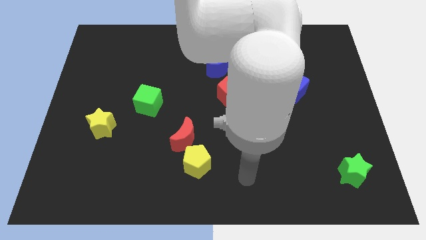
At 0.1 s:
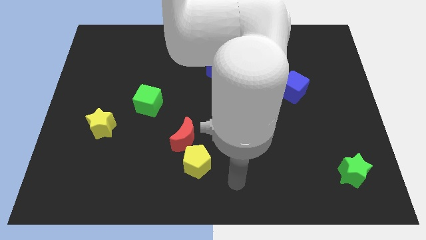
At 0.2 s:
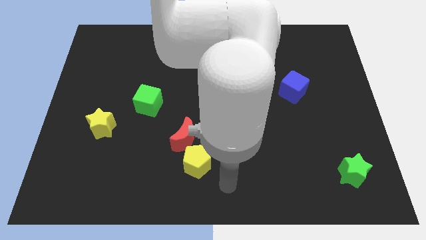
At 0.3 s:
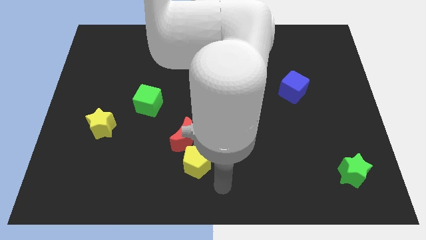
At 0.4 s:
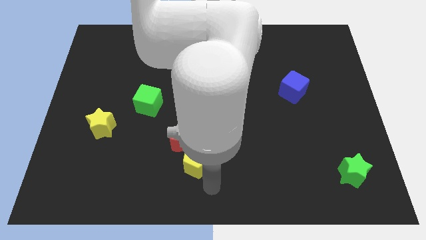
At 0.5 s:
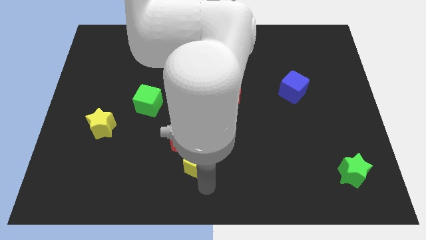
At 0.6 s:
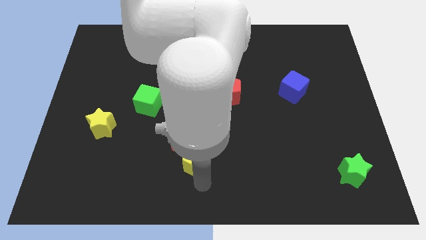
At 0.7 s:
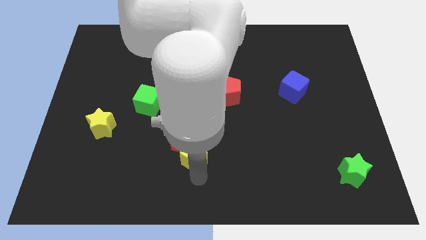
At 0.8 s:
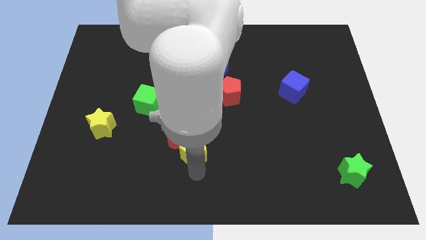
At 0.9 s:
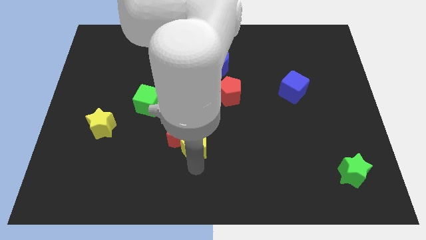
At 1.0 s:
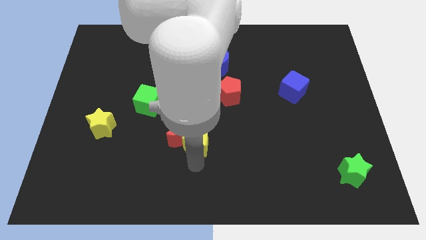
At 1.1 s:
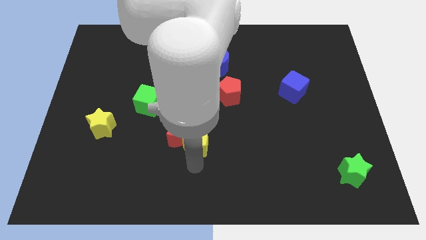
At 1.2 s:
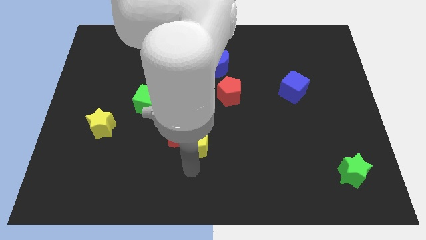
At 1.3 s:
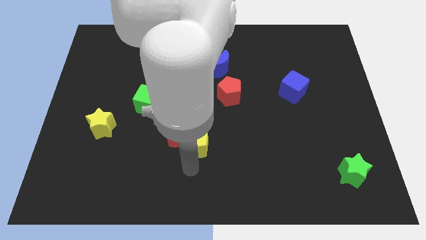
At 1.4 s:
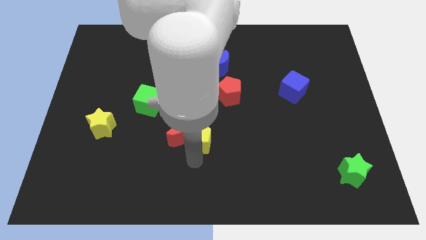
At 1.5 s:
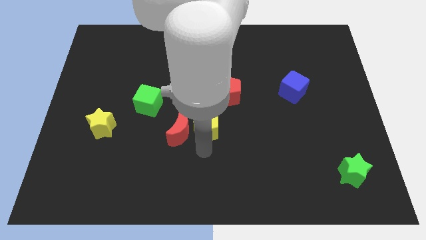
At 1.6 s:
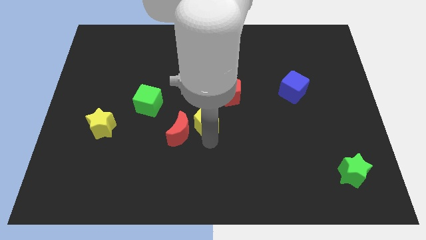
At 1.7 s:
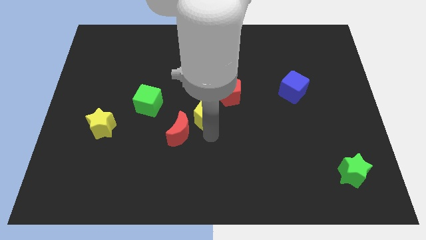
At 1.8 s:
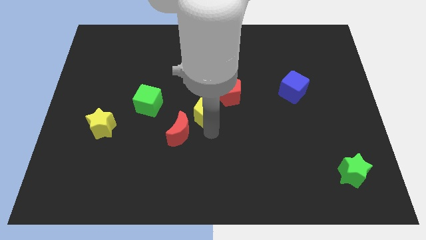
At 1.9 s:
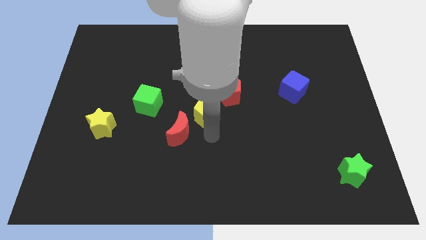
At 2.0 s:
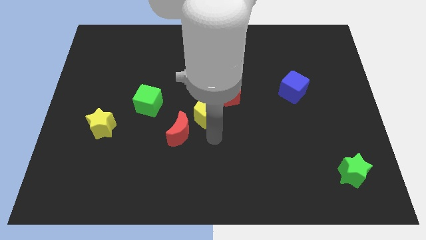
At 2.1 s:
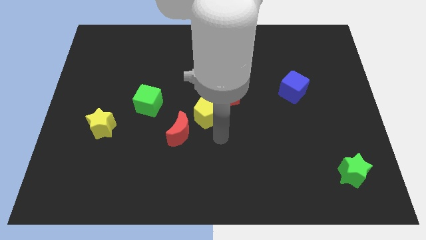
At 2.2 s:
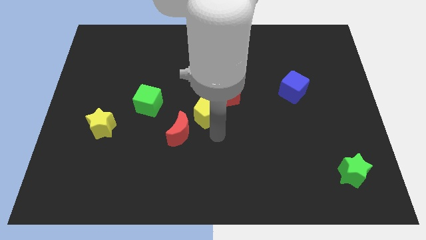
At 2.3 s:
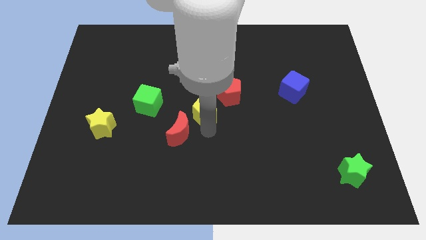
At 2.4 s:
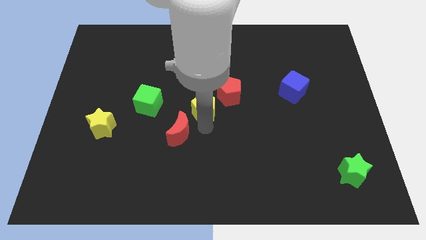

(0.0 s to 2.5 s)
move the yellow pentagon in between the red crescent and red pentagon

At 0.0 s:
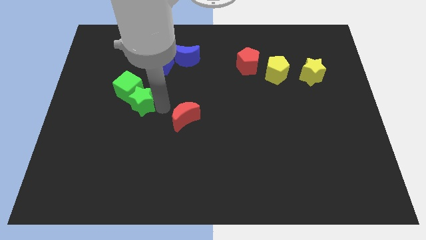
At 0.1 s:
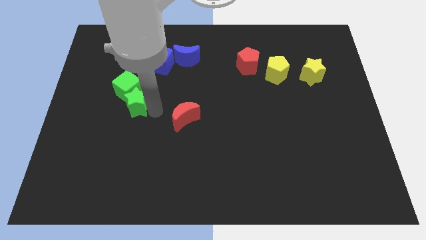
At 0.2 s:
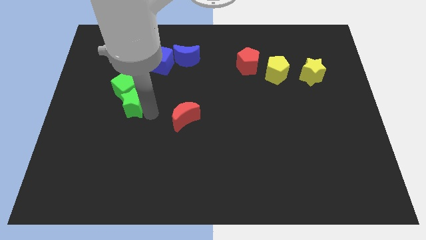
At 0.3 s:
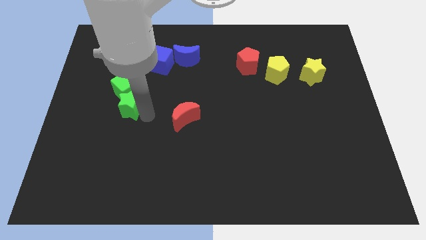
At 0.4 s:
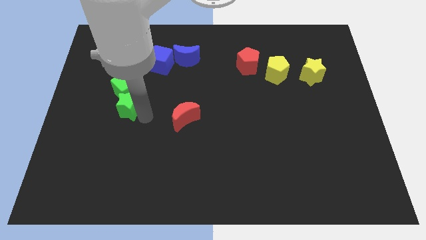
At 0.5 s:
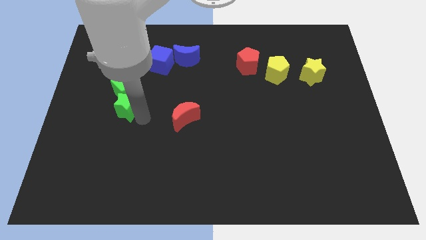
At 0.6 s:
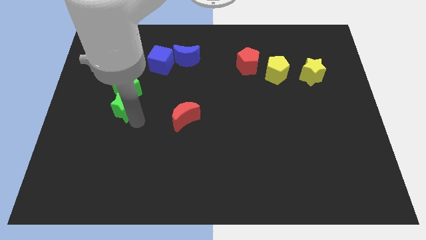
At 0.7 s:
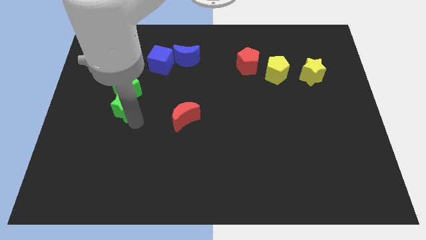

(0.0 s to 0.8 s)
move the green star left to the green cube

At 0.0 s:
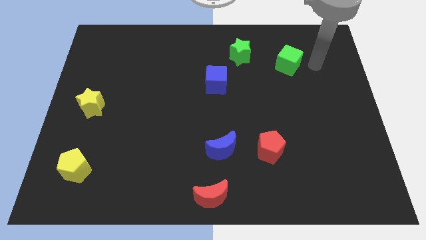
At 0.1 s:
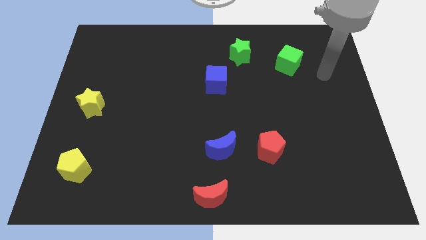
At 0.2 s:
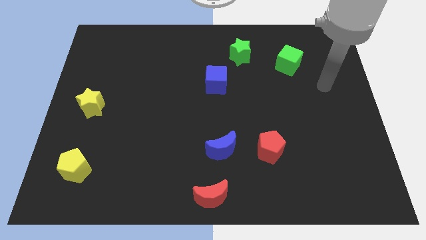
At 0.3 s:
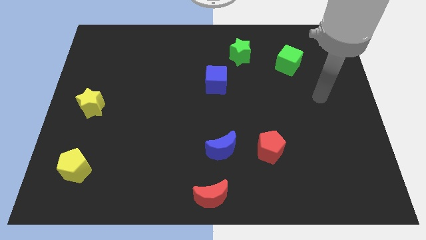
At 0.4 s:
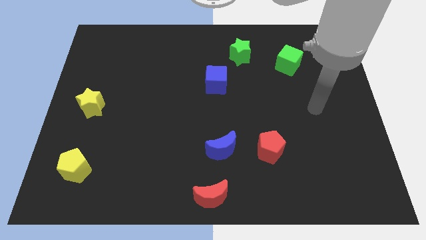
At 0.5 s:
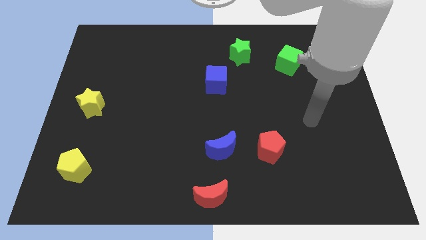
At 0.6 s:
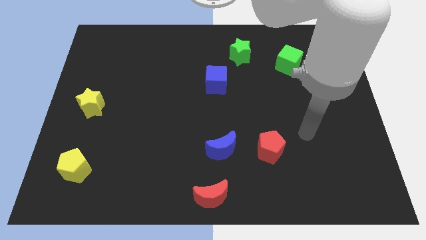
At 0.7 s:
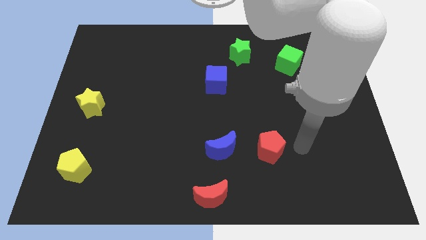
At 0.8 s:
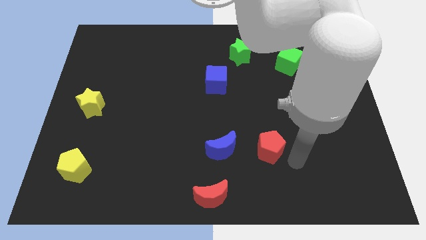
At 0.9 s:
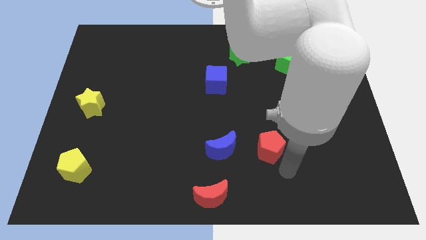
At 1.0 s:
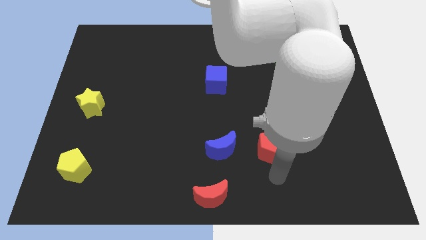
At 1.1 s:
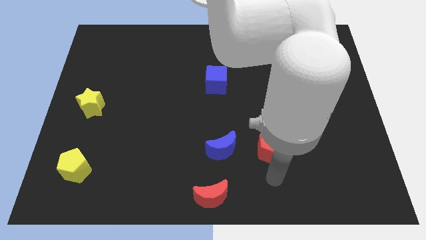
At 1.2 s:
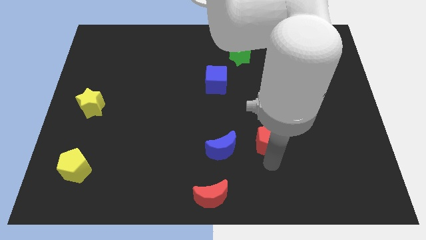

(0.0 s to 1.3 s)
move your arm to the bottom of the red pentagon

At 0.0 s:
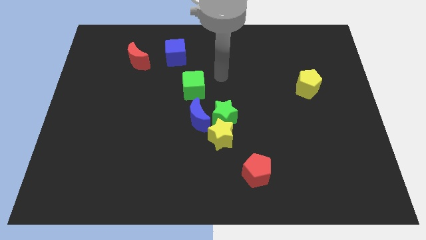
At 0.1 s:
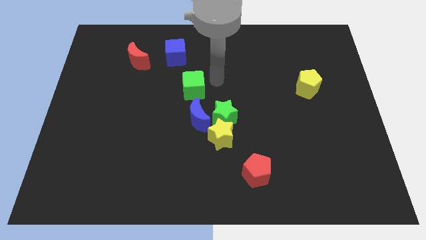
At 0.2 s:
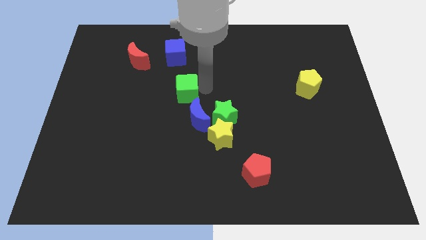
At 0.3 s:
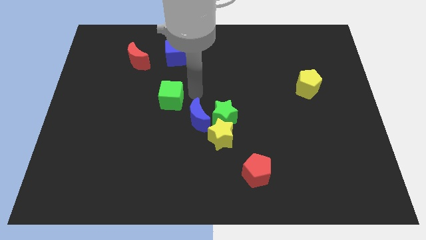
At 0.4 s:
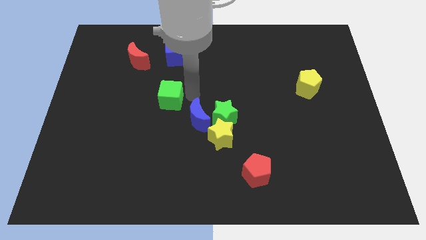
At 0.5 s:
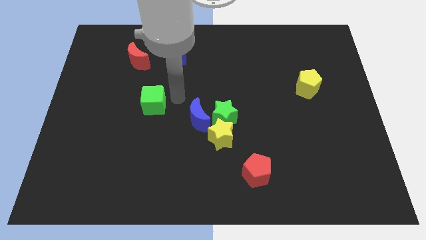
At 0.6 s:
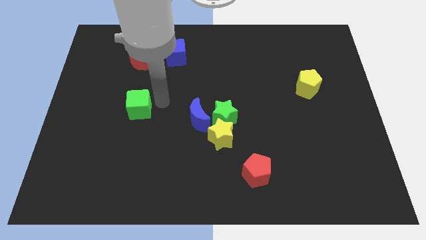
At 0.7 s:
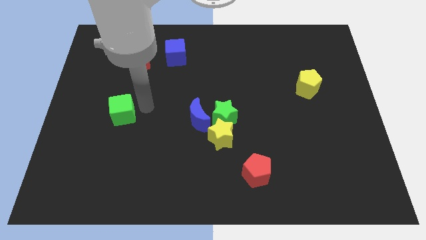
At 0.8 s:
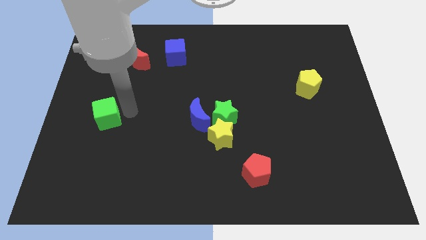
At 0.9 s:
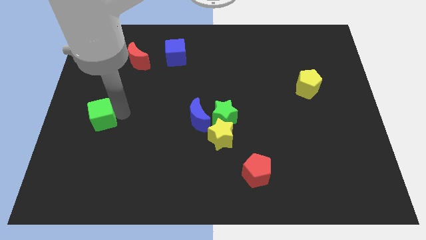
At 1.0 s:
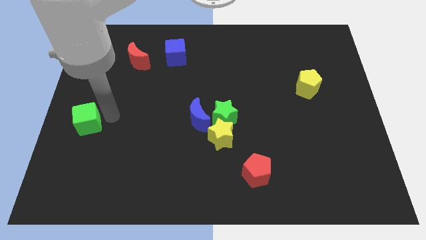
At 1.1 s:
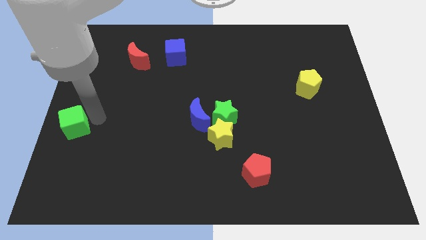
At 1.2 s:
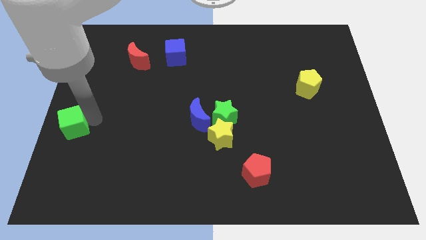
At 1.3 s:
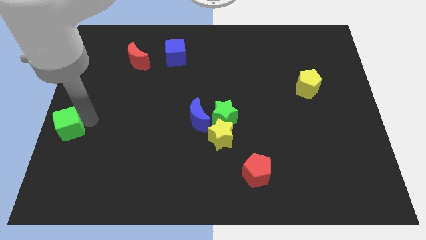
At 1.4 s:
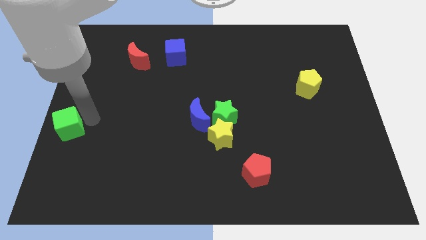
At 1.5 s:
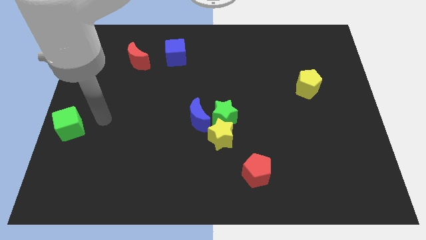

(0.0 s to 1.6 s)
push the green cube to the center left of the board

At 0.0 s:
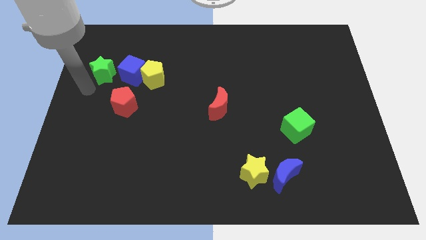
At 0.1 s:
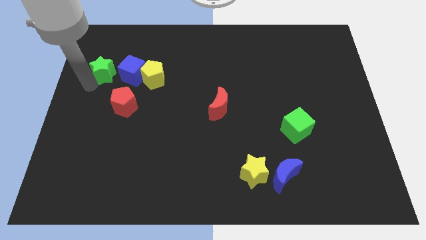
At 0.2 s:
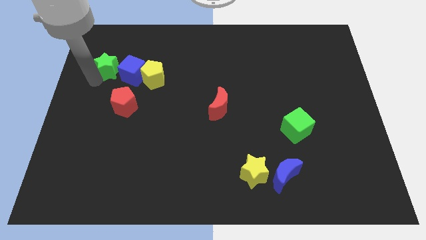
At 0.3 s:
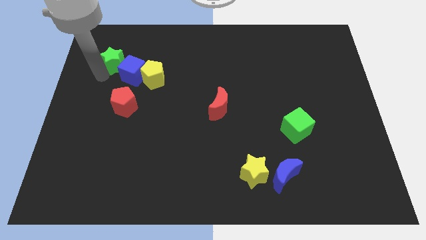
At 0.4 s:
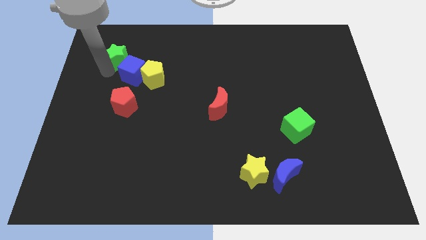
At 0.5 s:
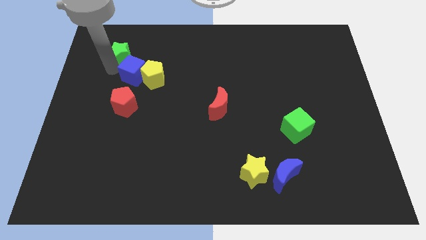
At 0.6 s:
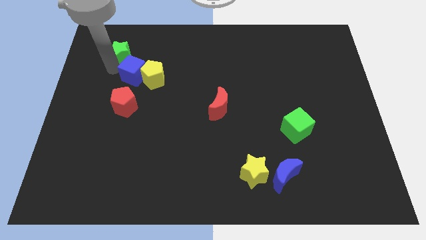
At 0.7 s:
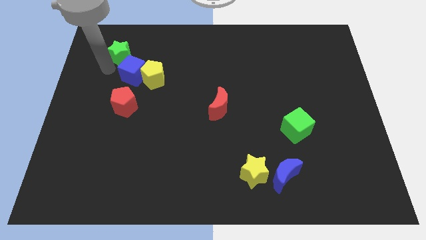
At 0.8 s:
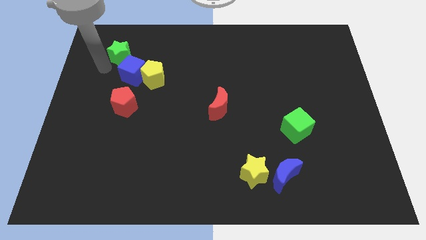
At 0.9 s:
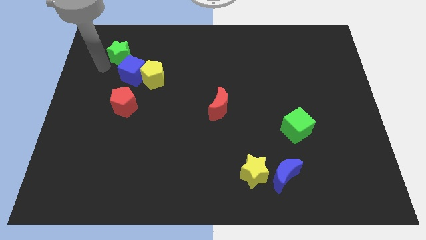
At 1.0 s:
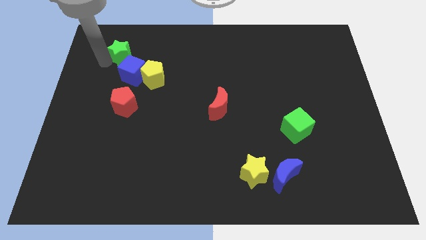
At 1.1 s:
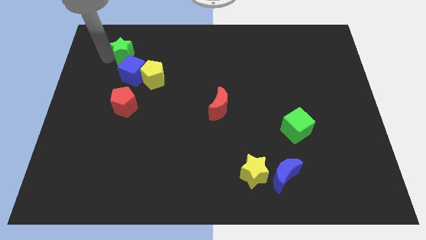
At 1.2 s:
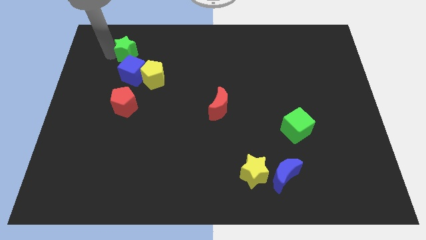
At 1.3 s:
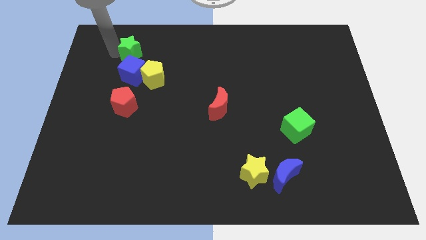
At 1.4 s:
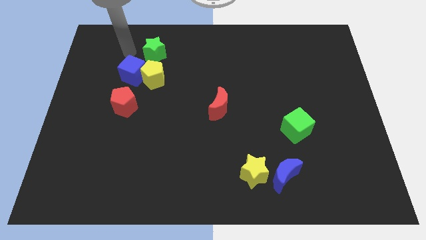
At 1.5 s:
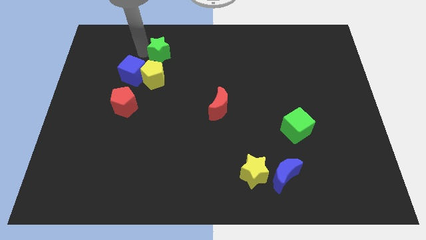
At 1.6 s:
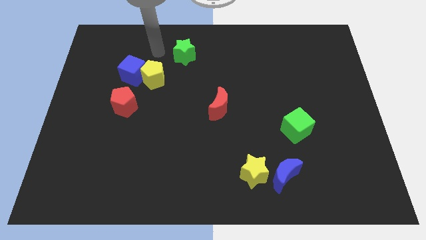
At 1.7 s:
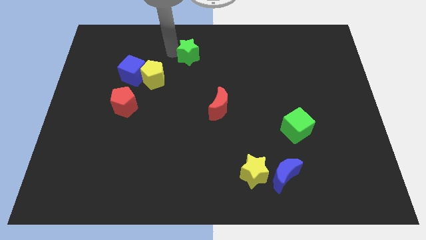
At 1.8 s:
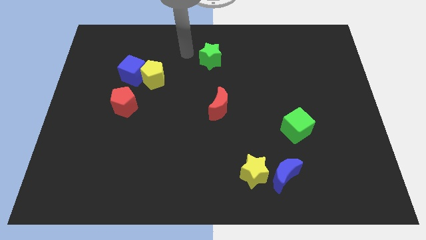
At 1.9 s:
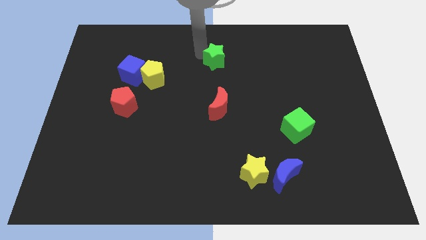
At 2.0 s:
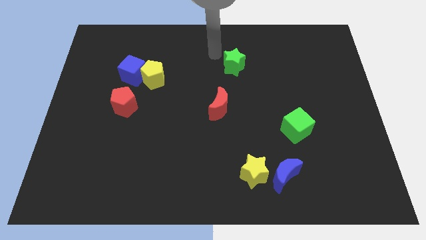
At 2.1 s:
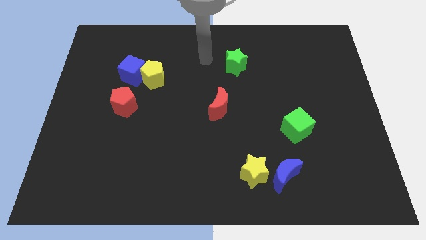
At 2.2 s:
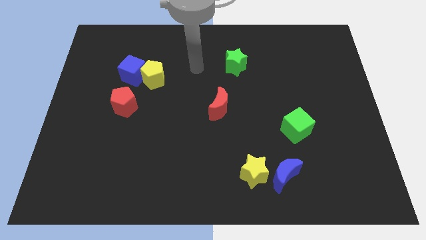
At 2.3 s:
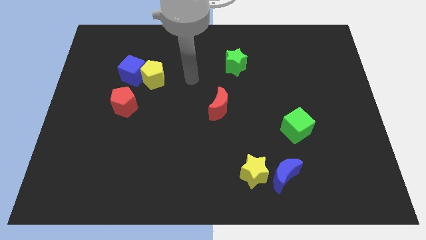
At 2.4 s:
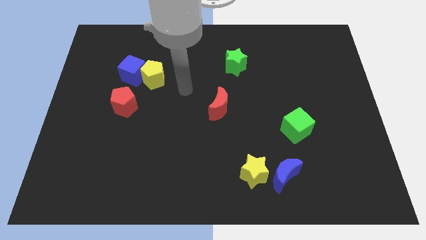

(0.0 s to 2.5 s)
put green star diagonally above red moon

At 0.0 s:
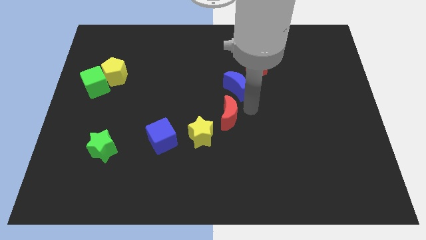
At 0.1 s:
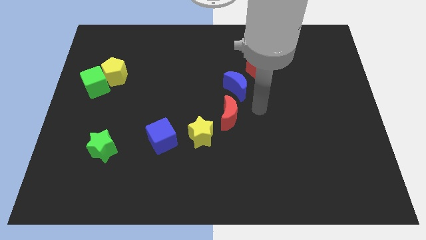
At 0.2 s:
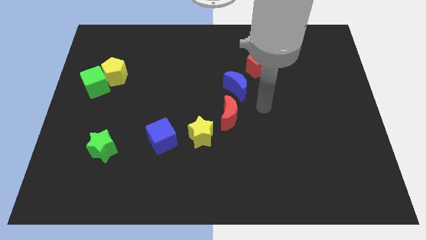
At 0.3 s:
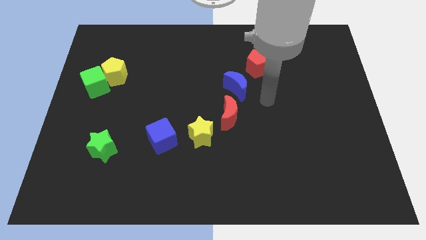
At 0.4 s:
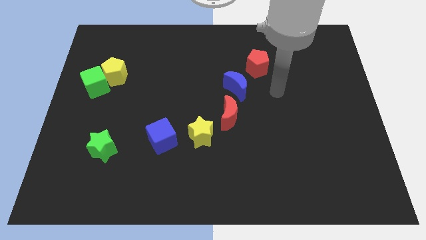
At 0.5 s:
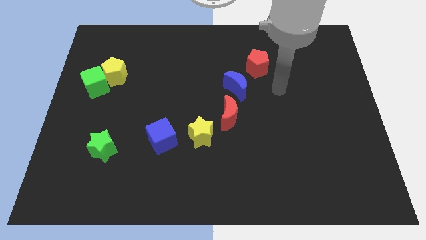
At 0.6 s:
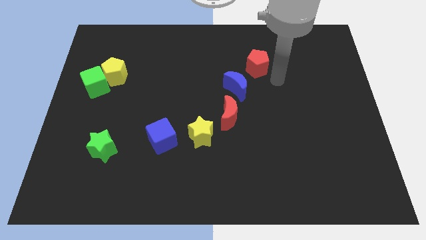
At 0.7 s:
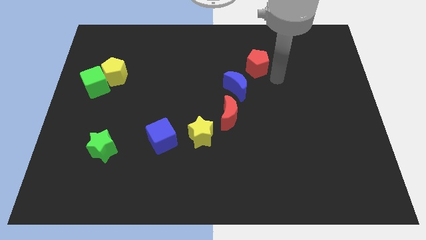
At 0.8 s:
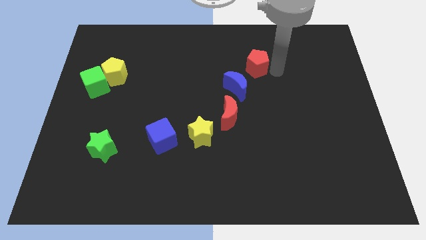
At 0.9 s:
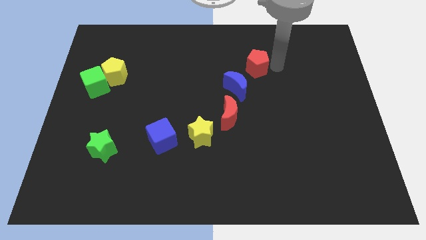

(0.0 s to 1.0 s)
point your arm to the right side of red pentagon
